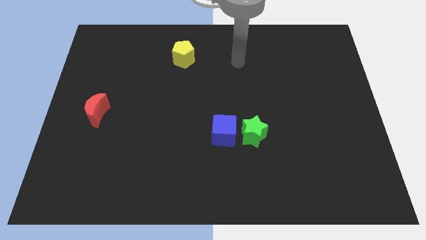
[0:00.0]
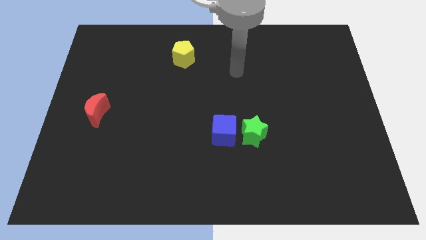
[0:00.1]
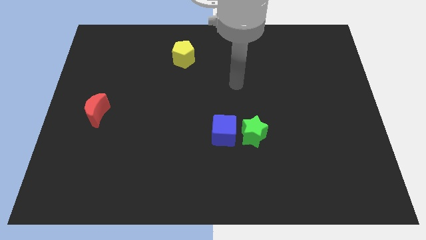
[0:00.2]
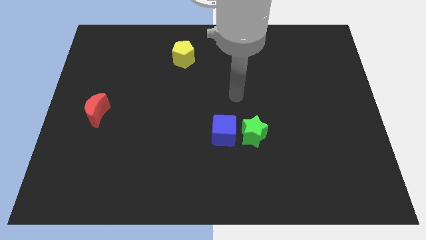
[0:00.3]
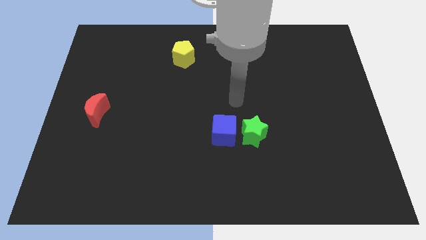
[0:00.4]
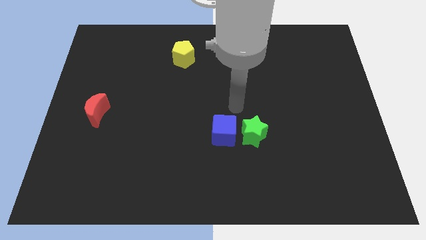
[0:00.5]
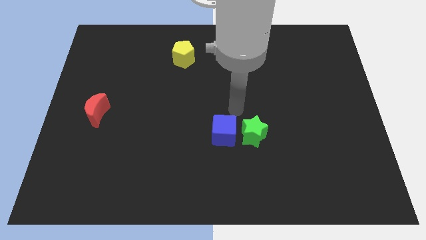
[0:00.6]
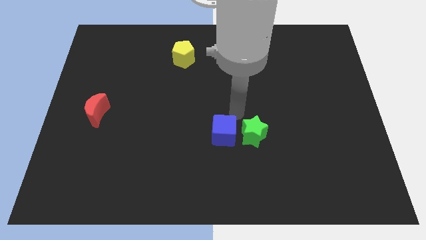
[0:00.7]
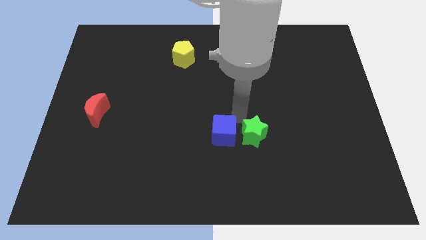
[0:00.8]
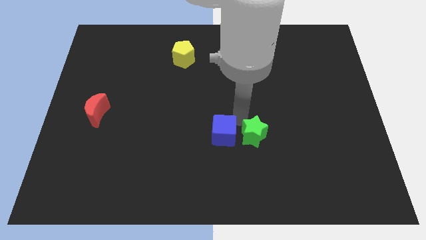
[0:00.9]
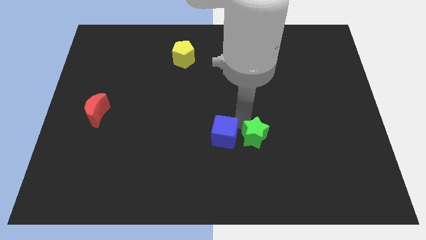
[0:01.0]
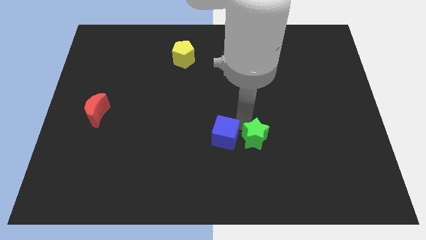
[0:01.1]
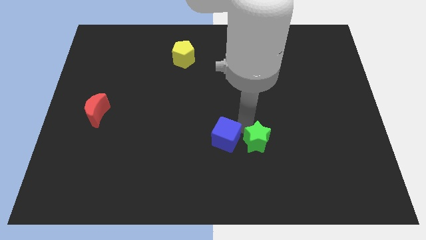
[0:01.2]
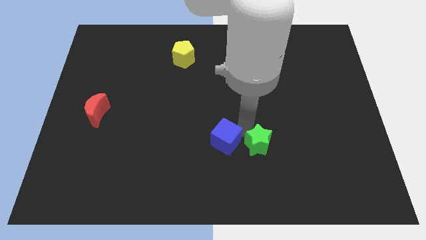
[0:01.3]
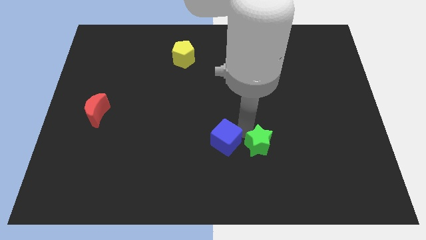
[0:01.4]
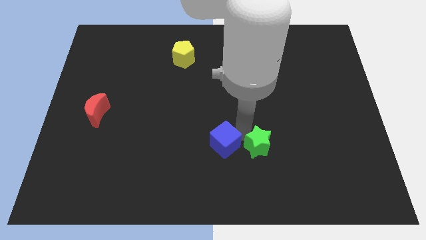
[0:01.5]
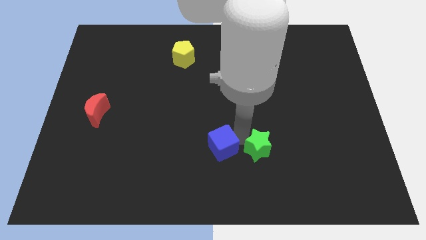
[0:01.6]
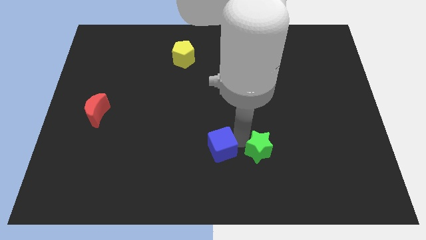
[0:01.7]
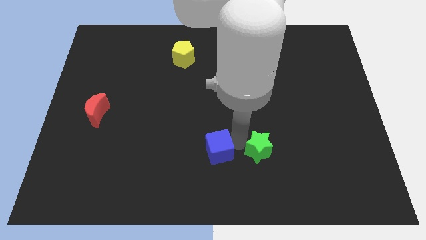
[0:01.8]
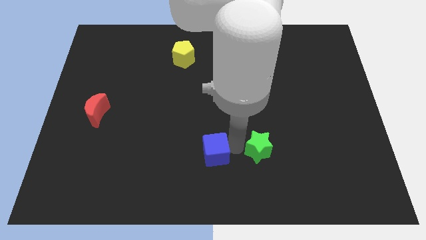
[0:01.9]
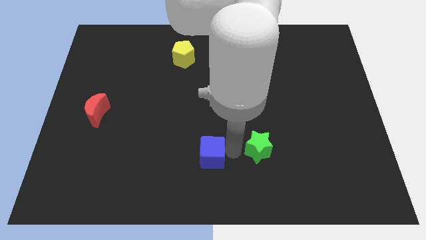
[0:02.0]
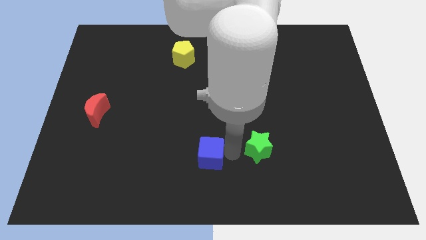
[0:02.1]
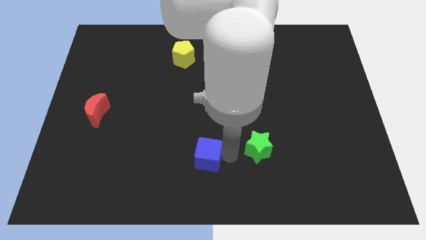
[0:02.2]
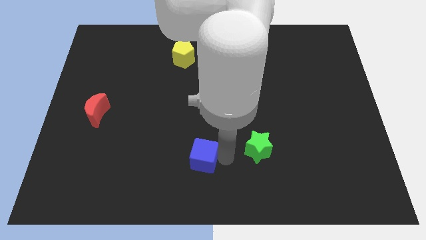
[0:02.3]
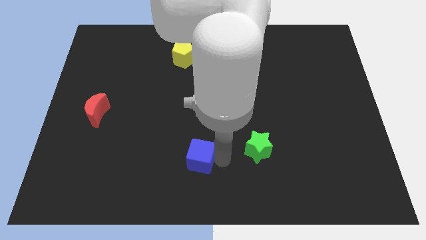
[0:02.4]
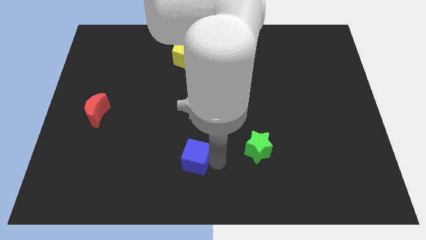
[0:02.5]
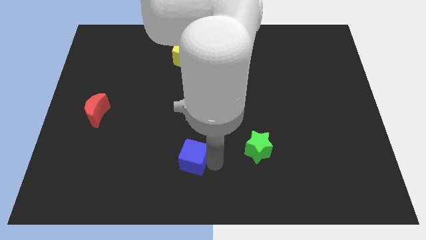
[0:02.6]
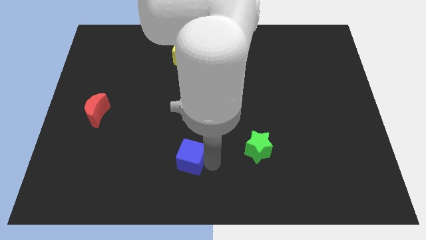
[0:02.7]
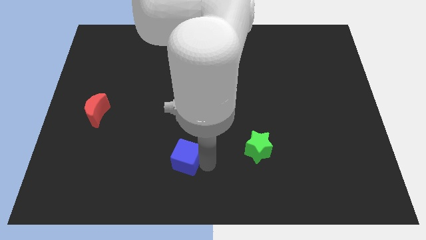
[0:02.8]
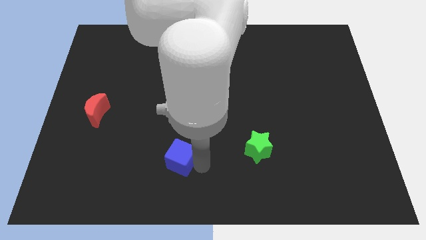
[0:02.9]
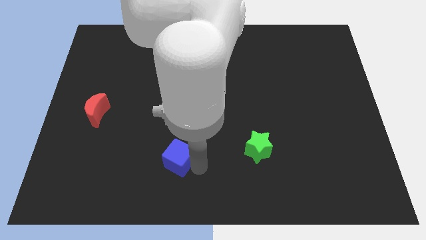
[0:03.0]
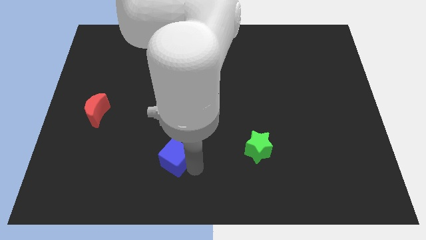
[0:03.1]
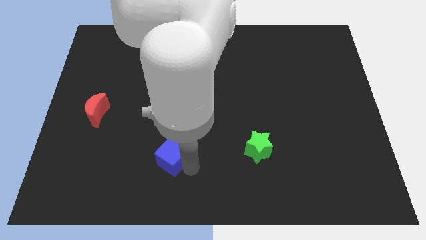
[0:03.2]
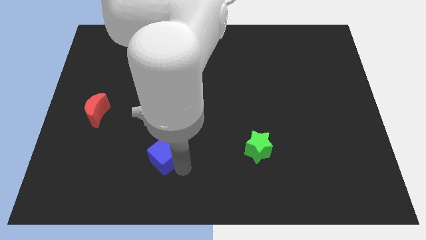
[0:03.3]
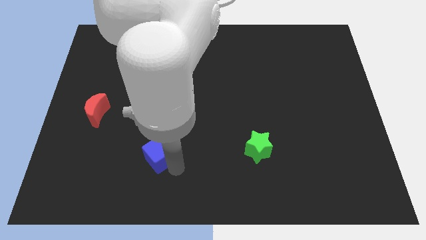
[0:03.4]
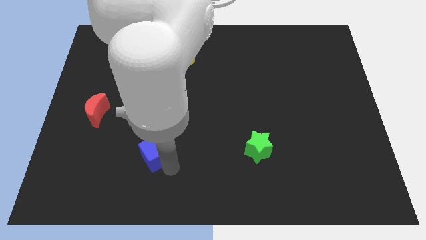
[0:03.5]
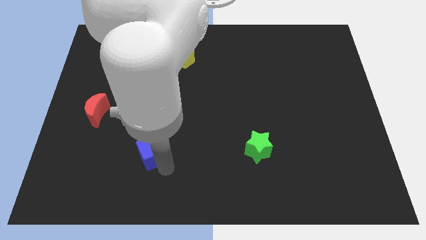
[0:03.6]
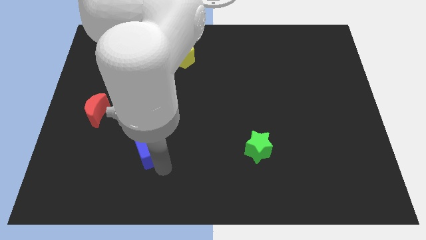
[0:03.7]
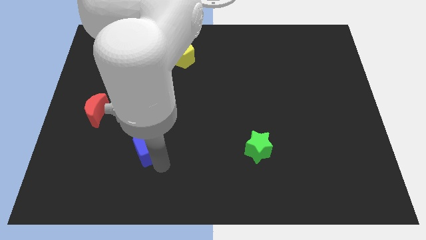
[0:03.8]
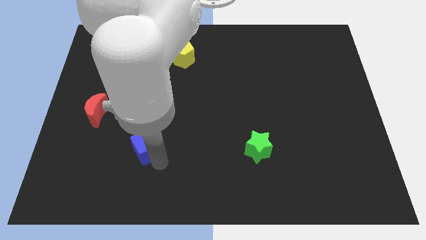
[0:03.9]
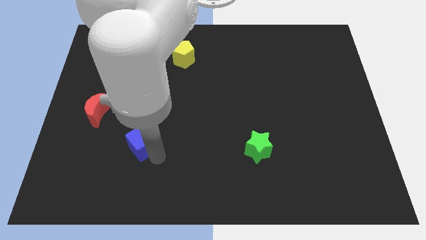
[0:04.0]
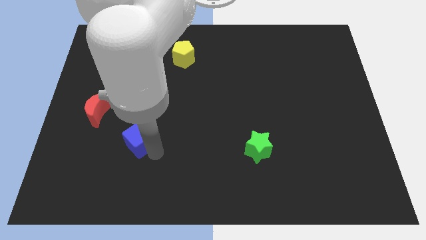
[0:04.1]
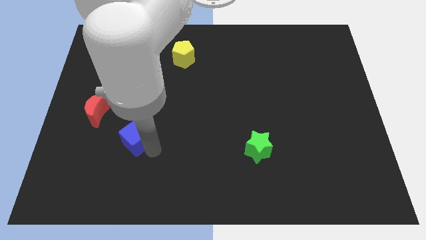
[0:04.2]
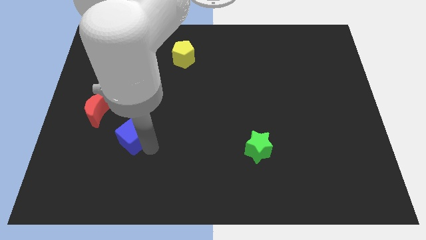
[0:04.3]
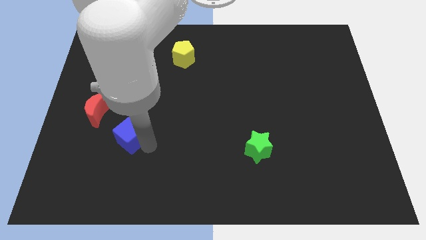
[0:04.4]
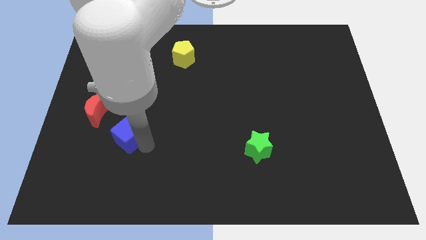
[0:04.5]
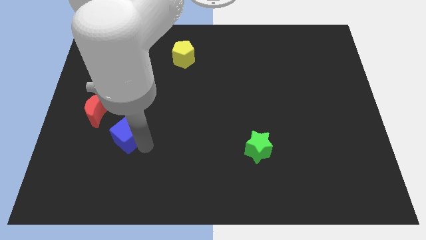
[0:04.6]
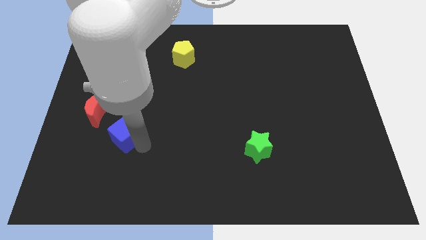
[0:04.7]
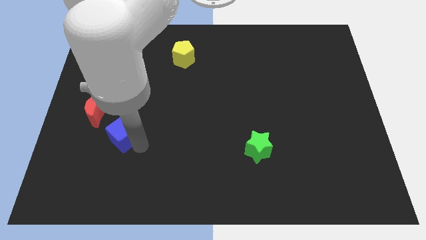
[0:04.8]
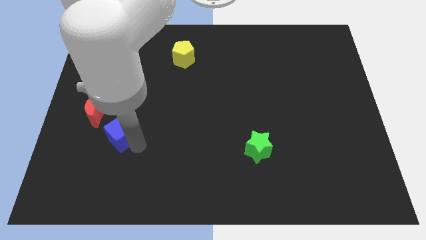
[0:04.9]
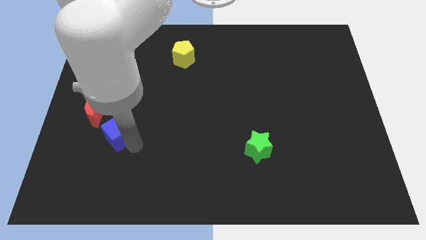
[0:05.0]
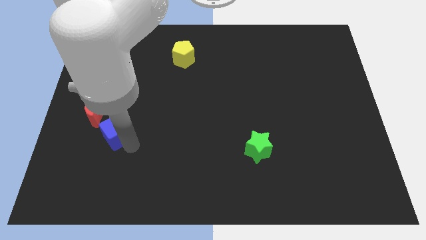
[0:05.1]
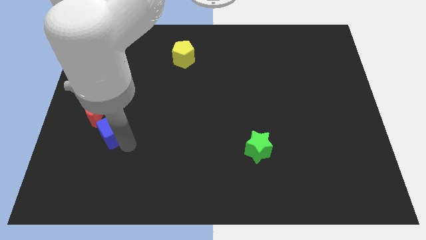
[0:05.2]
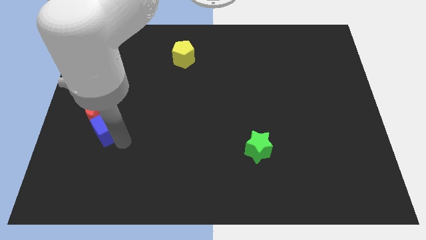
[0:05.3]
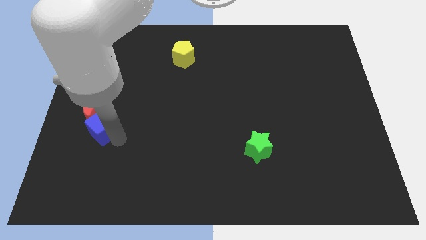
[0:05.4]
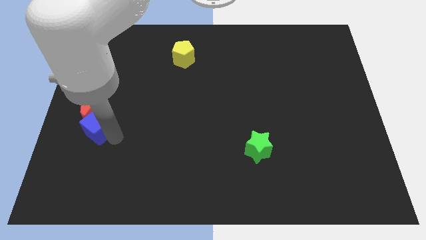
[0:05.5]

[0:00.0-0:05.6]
slide the blue cube next to the red block

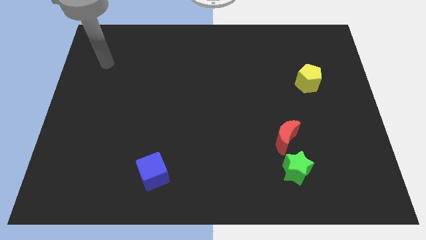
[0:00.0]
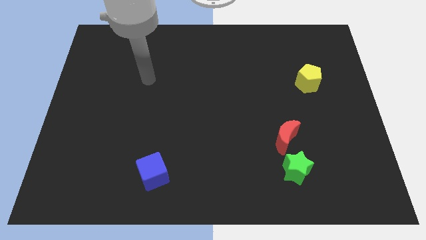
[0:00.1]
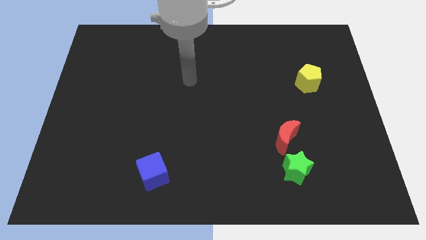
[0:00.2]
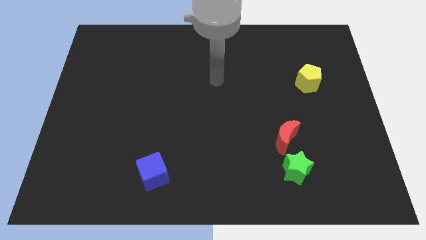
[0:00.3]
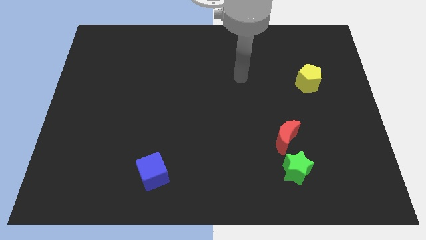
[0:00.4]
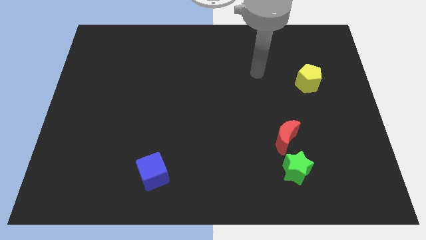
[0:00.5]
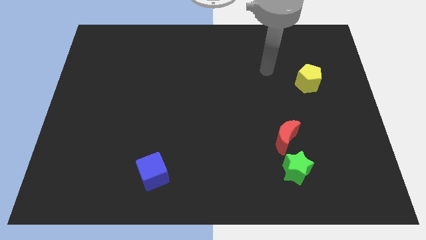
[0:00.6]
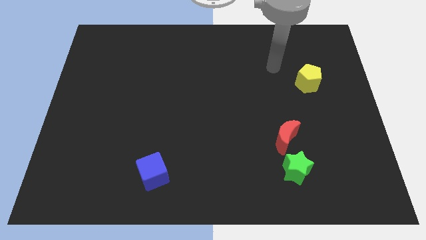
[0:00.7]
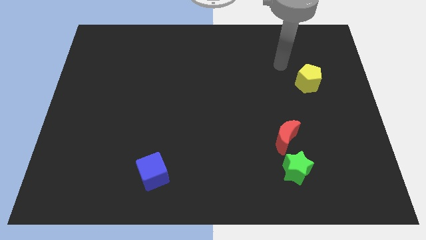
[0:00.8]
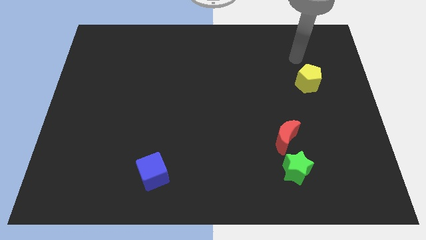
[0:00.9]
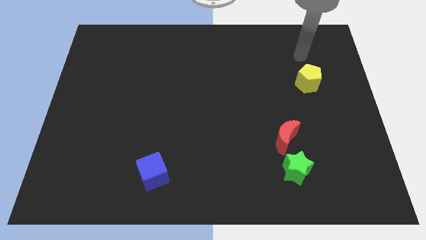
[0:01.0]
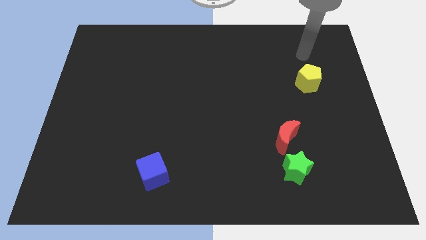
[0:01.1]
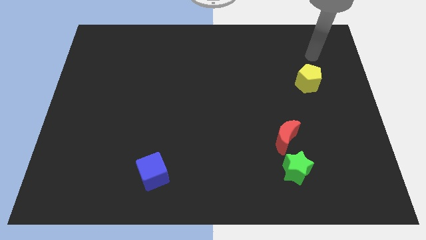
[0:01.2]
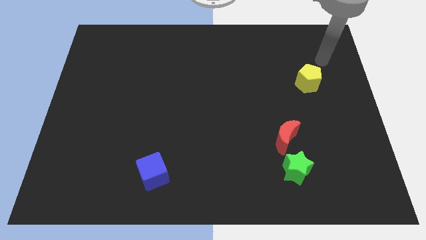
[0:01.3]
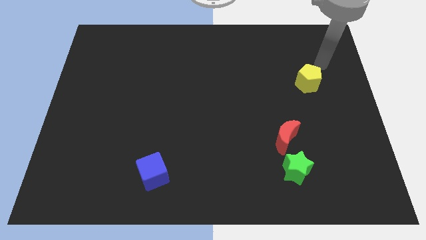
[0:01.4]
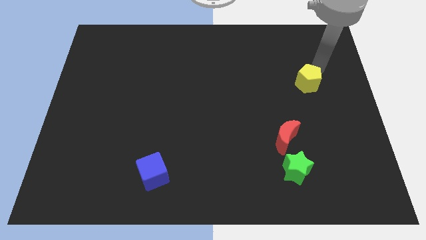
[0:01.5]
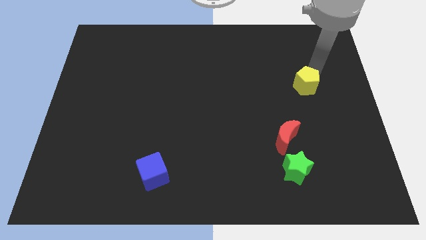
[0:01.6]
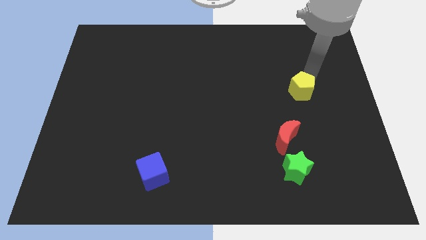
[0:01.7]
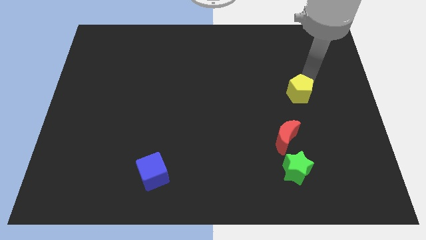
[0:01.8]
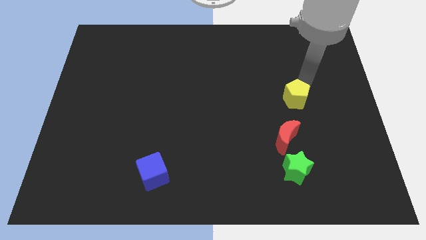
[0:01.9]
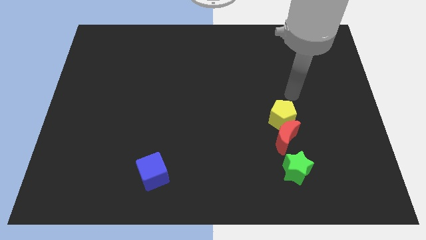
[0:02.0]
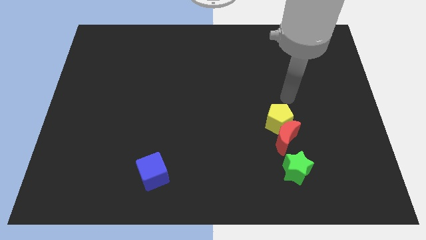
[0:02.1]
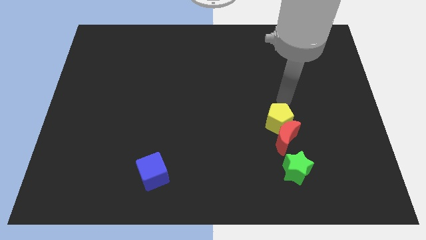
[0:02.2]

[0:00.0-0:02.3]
push the yellow block to the red moon

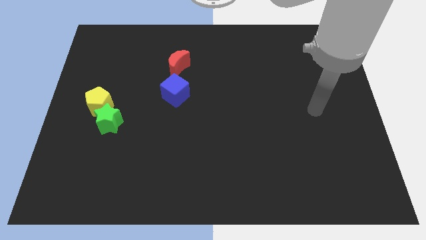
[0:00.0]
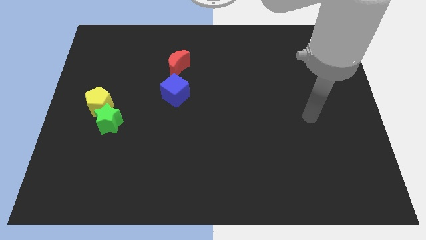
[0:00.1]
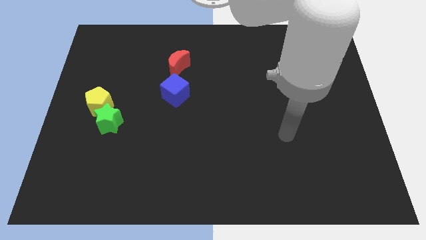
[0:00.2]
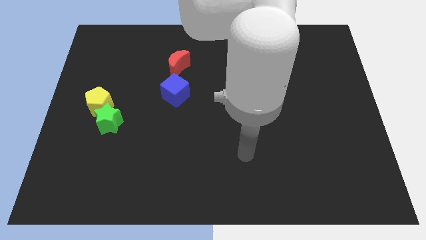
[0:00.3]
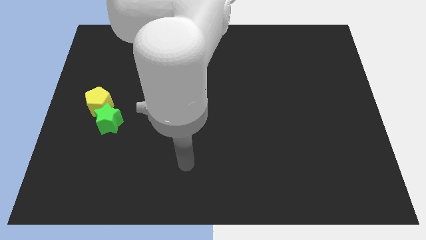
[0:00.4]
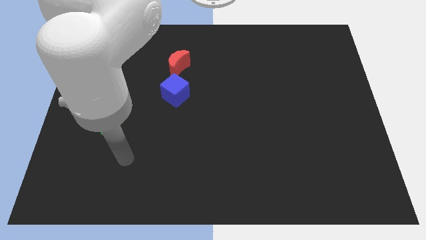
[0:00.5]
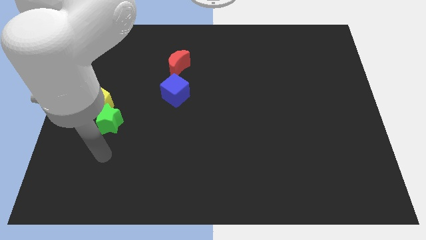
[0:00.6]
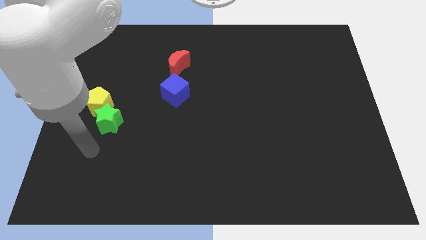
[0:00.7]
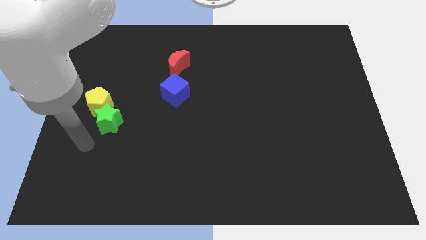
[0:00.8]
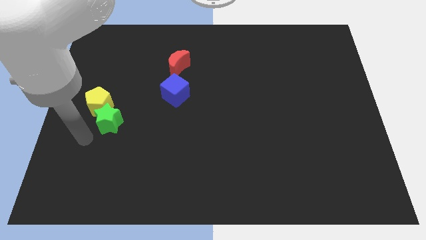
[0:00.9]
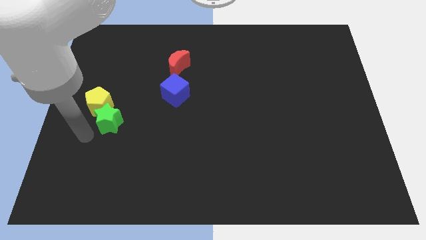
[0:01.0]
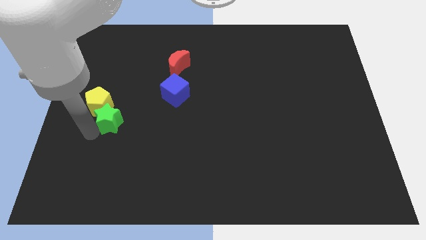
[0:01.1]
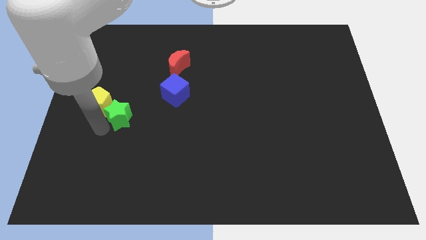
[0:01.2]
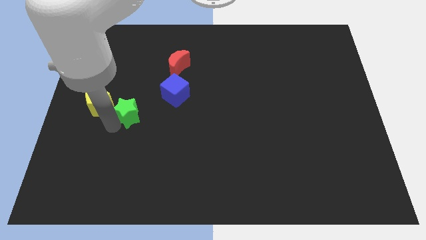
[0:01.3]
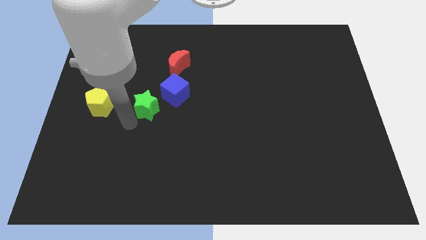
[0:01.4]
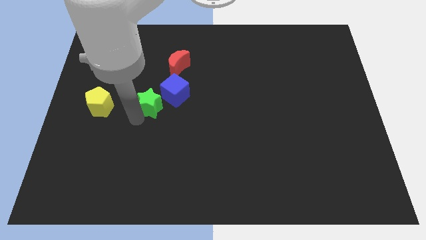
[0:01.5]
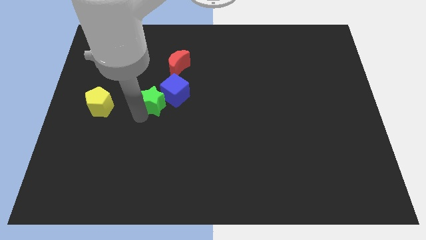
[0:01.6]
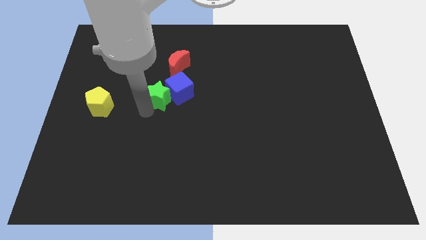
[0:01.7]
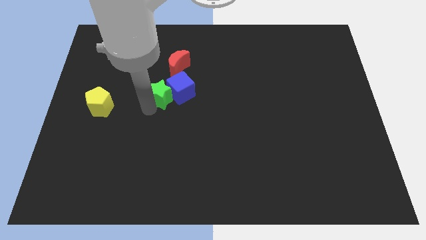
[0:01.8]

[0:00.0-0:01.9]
move the green block close to the cube
